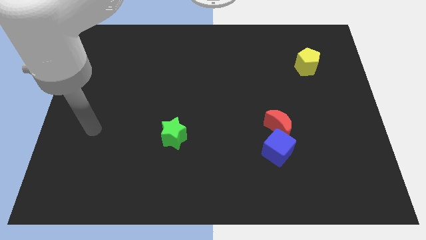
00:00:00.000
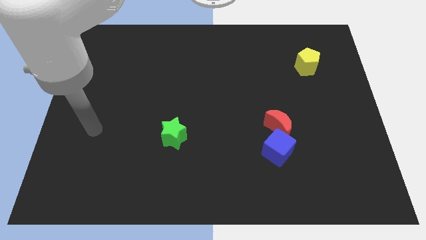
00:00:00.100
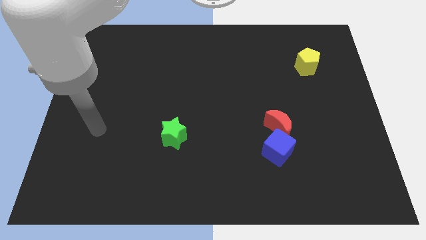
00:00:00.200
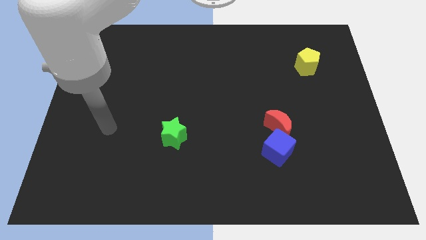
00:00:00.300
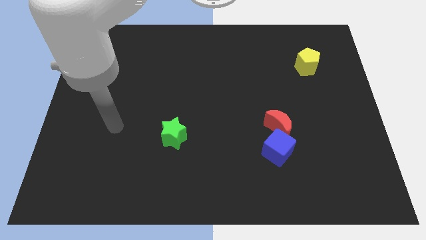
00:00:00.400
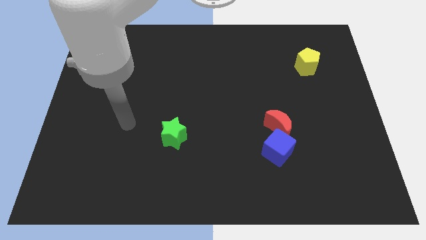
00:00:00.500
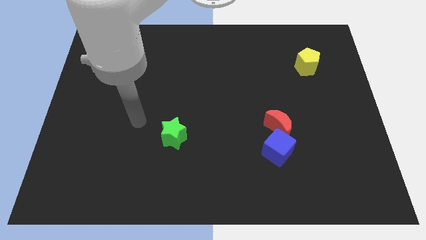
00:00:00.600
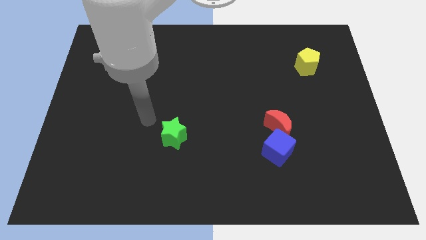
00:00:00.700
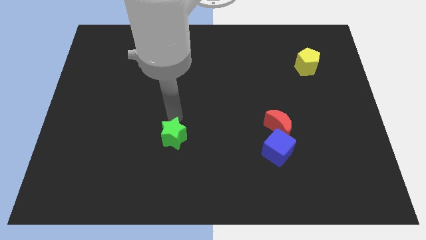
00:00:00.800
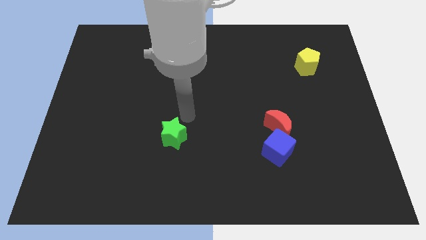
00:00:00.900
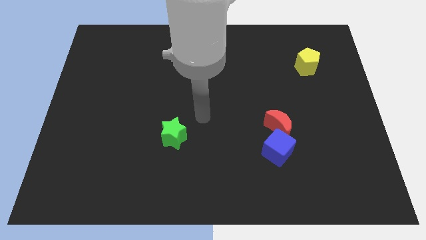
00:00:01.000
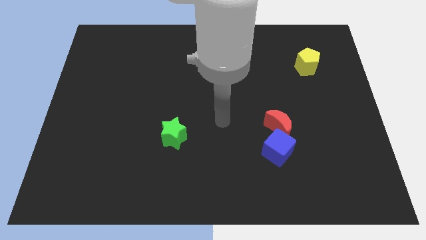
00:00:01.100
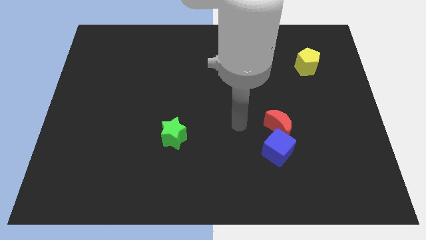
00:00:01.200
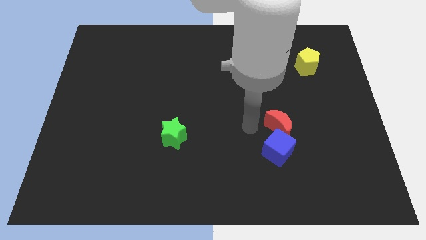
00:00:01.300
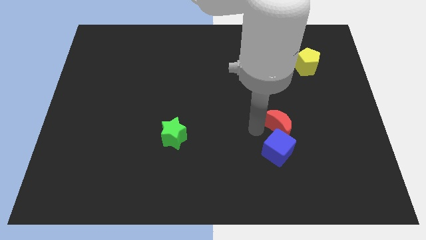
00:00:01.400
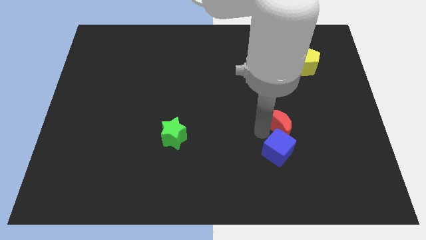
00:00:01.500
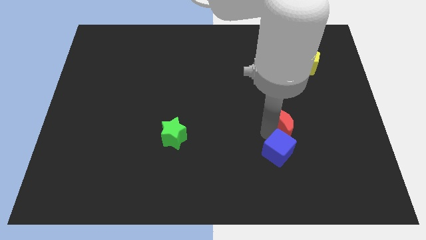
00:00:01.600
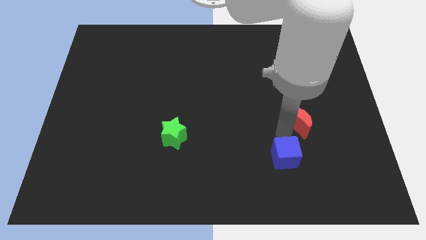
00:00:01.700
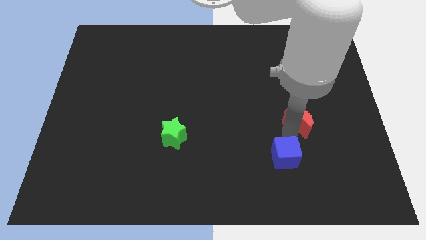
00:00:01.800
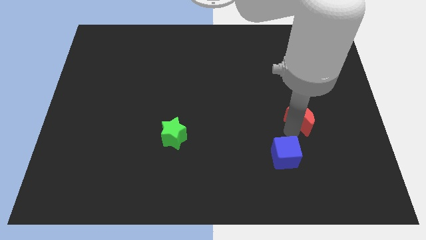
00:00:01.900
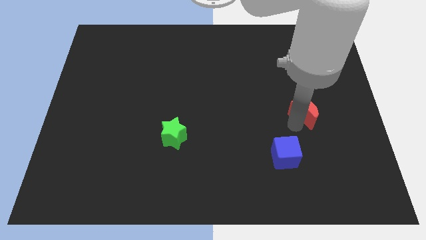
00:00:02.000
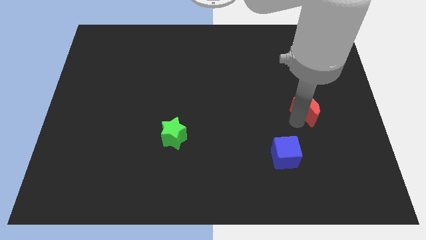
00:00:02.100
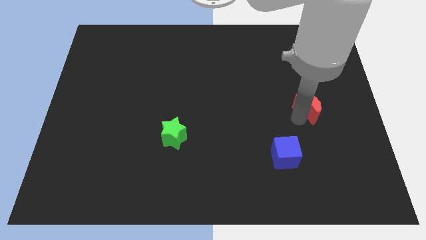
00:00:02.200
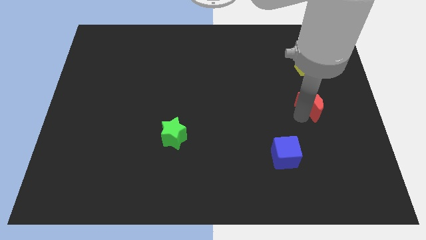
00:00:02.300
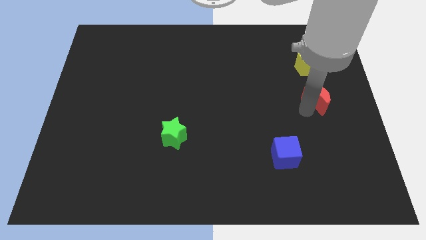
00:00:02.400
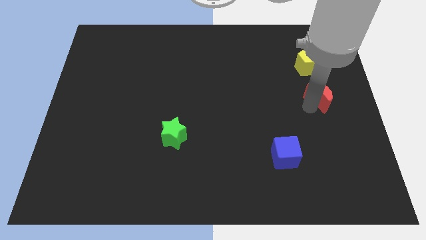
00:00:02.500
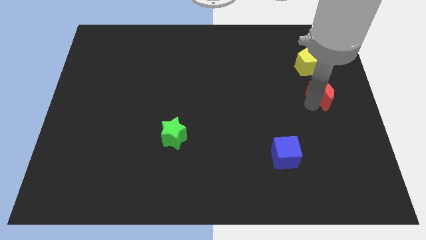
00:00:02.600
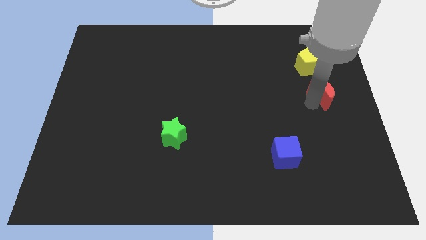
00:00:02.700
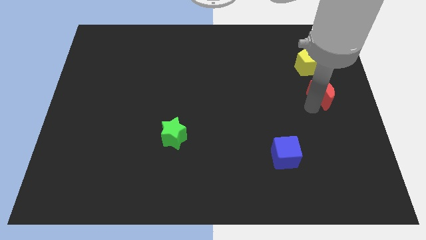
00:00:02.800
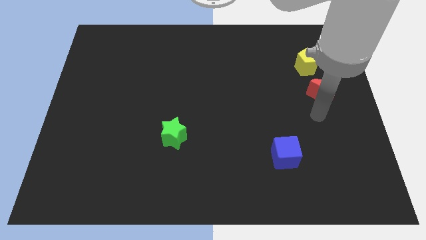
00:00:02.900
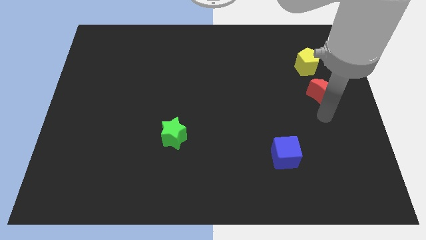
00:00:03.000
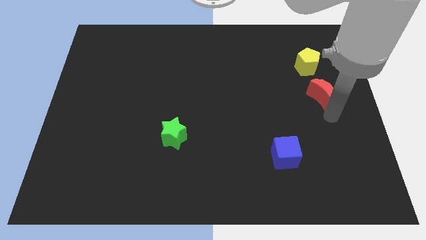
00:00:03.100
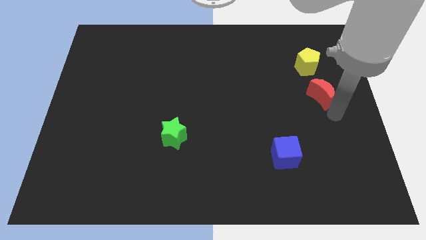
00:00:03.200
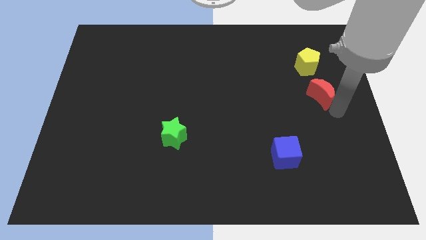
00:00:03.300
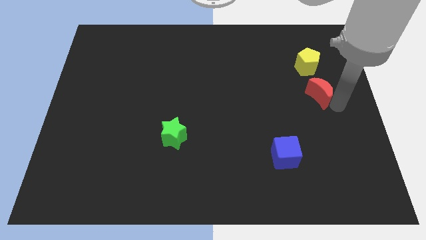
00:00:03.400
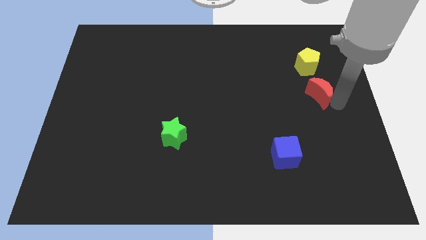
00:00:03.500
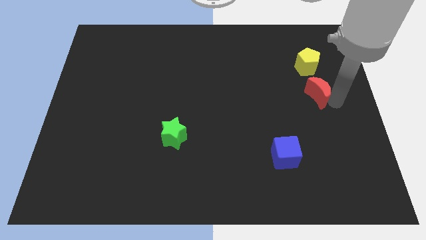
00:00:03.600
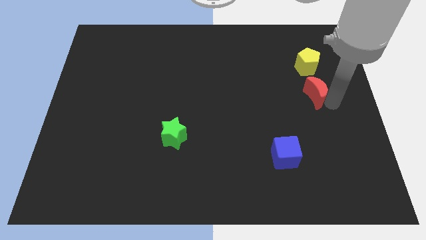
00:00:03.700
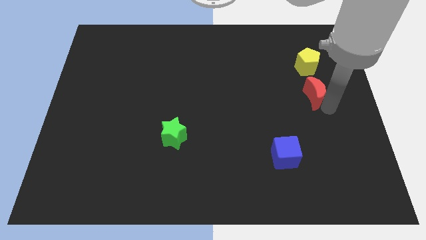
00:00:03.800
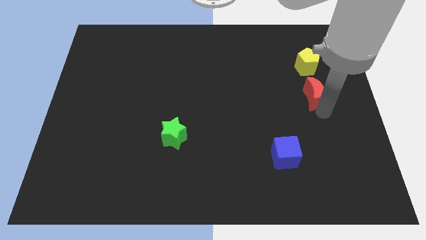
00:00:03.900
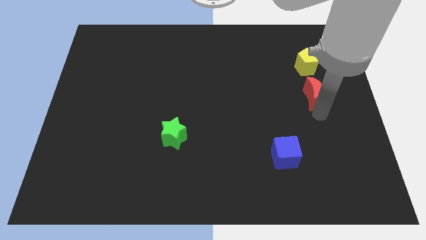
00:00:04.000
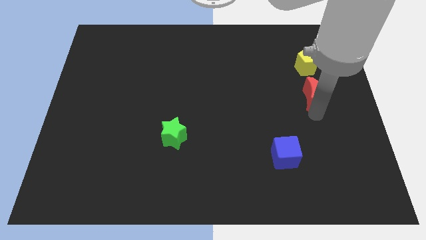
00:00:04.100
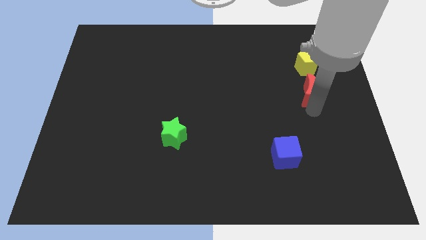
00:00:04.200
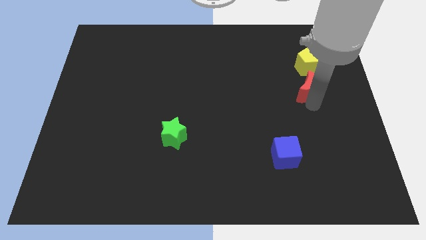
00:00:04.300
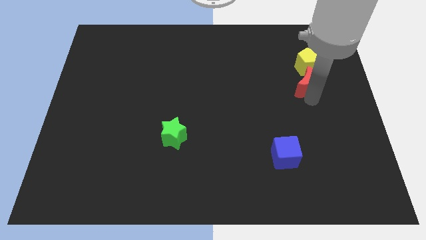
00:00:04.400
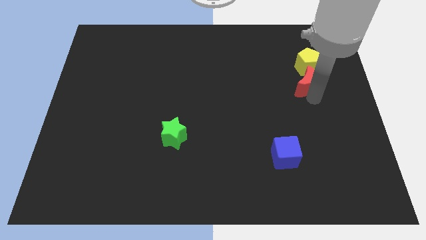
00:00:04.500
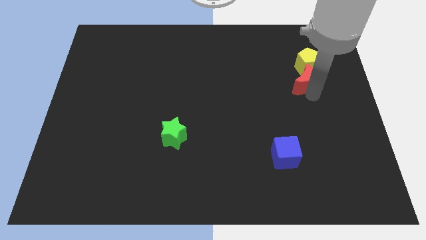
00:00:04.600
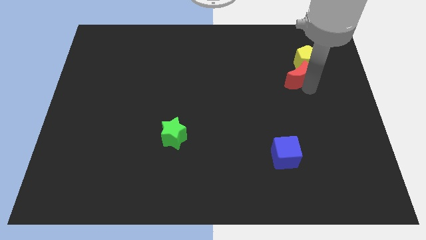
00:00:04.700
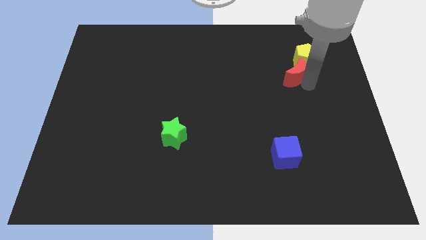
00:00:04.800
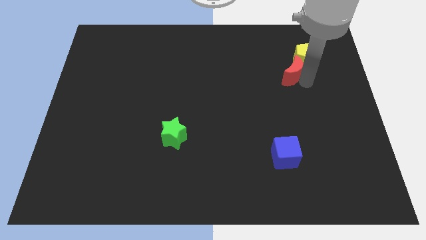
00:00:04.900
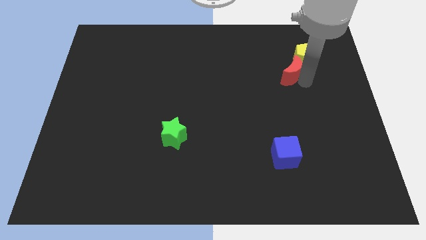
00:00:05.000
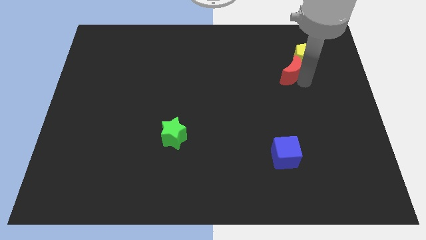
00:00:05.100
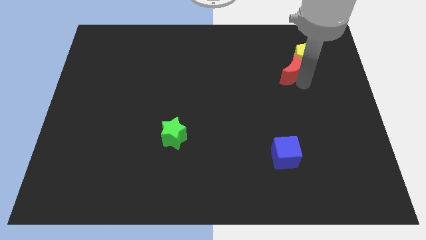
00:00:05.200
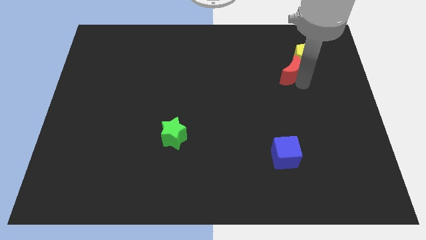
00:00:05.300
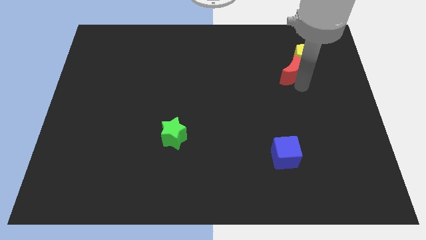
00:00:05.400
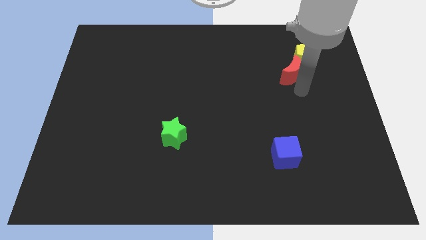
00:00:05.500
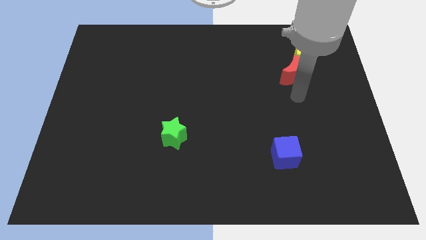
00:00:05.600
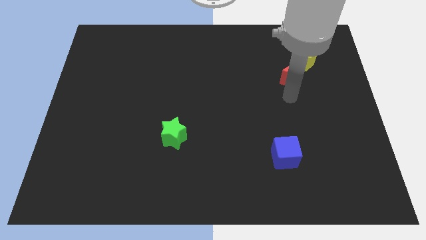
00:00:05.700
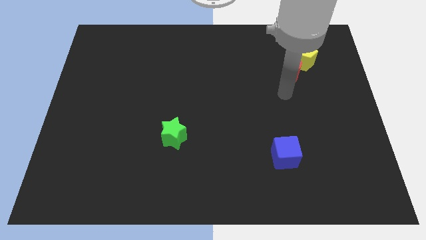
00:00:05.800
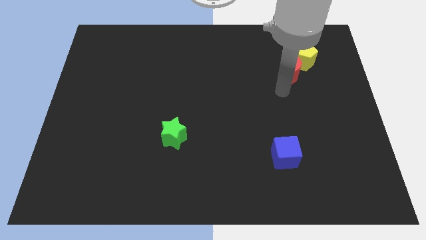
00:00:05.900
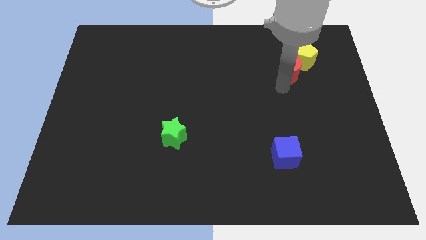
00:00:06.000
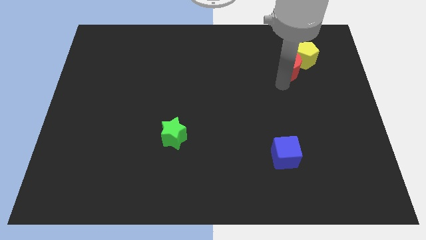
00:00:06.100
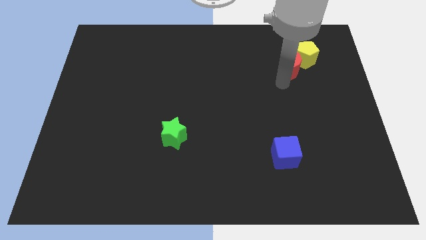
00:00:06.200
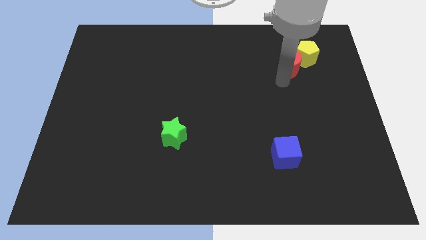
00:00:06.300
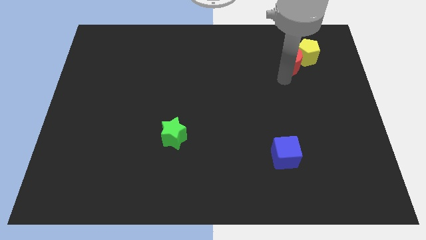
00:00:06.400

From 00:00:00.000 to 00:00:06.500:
push the moon towards the yellow block

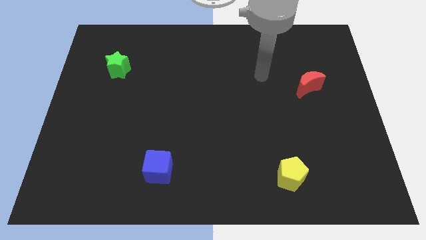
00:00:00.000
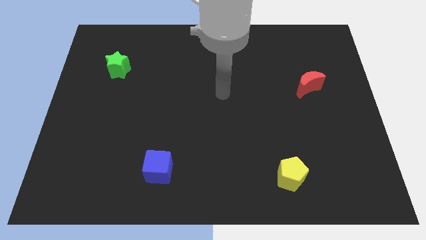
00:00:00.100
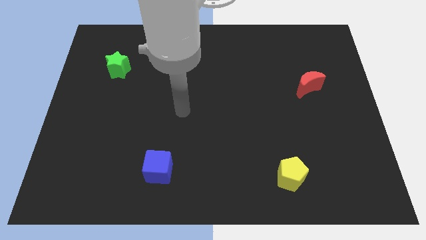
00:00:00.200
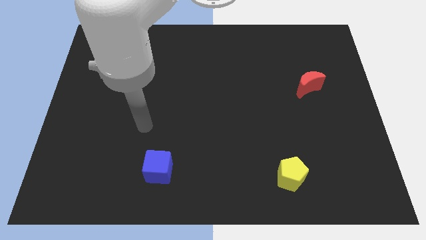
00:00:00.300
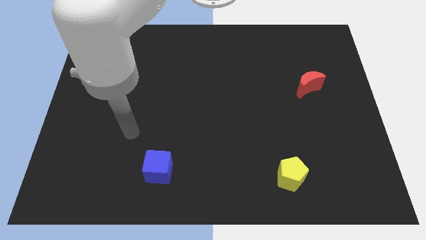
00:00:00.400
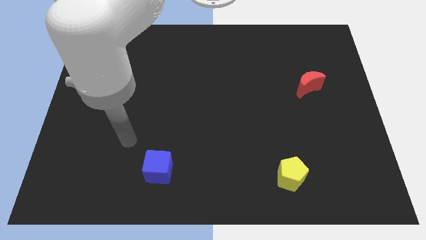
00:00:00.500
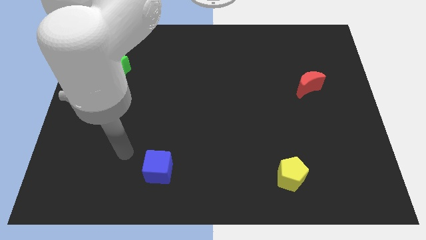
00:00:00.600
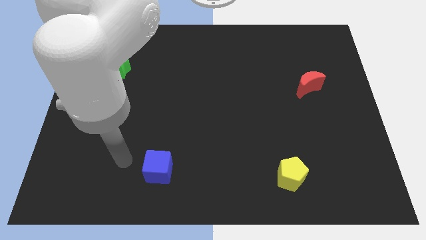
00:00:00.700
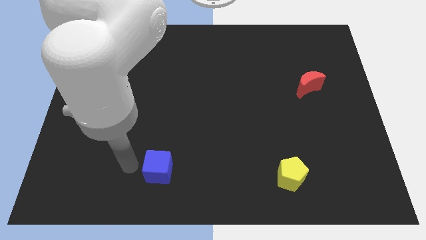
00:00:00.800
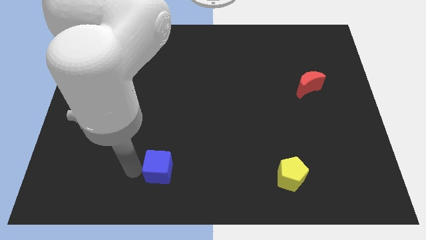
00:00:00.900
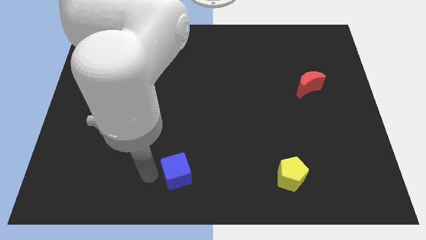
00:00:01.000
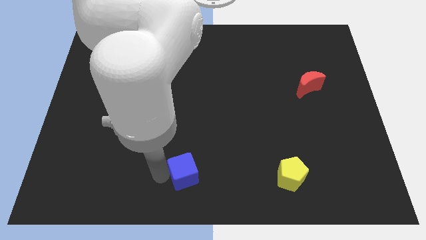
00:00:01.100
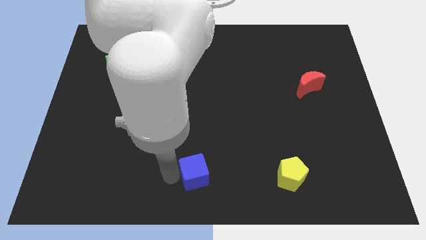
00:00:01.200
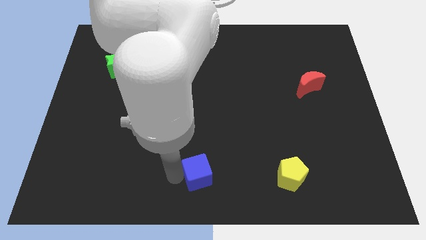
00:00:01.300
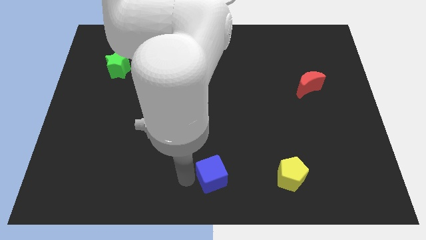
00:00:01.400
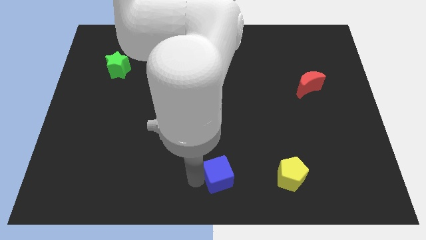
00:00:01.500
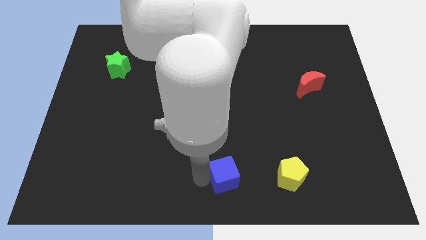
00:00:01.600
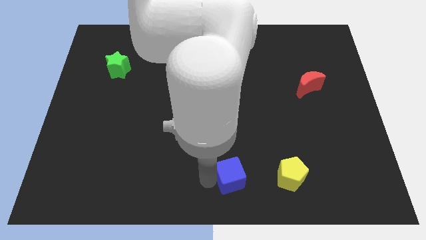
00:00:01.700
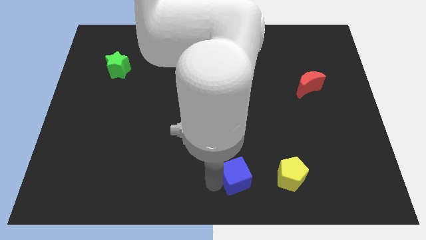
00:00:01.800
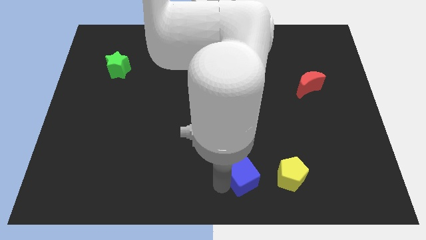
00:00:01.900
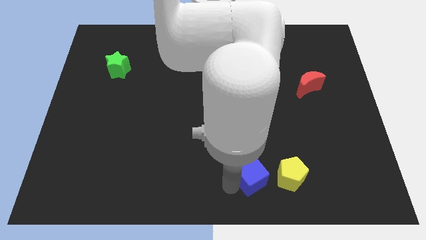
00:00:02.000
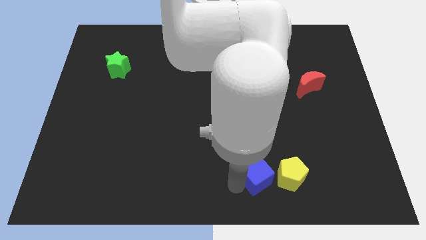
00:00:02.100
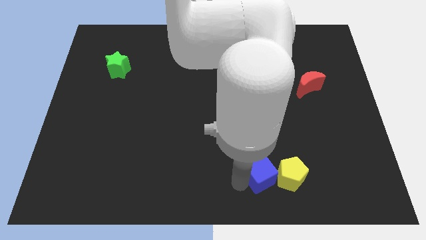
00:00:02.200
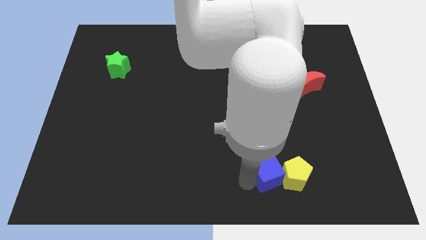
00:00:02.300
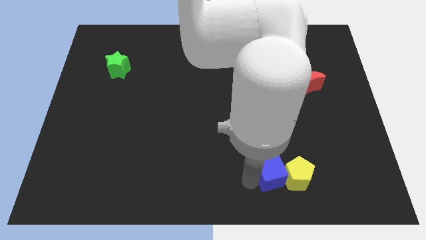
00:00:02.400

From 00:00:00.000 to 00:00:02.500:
push the cube next to the yellow pentagon
